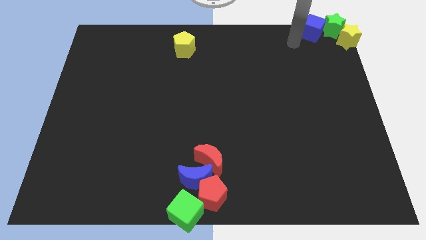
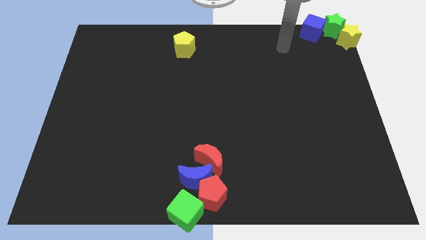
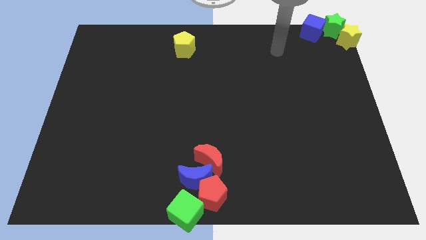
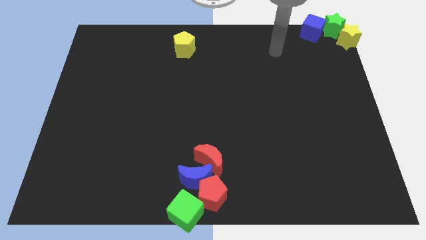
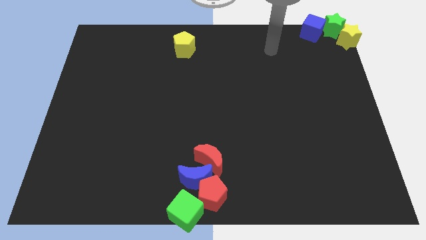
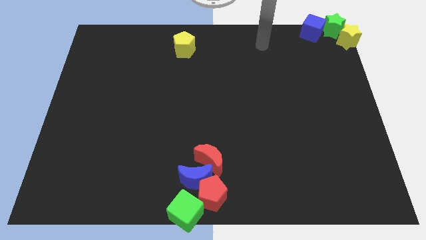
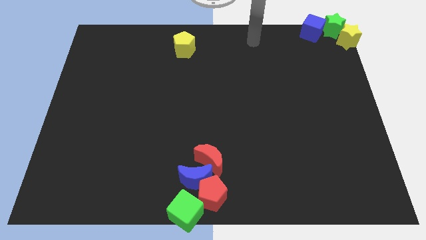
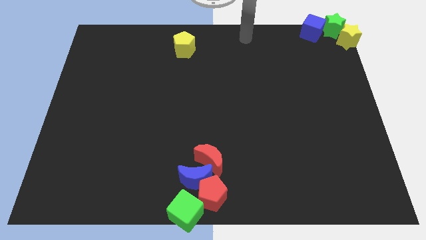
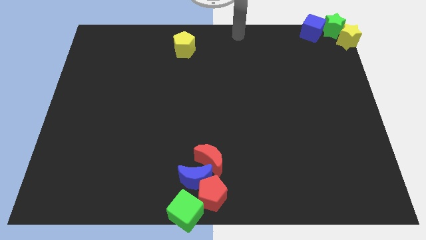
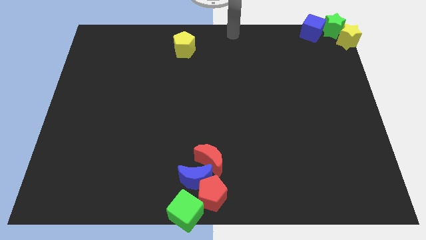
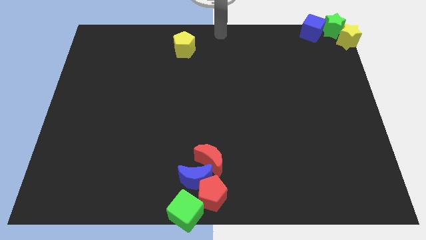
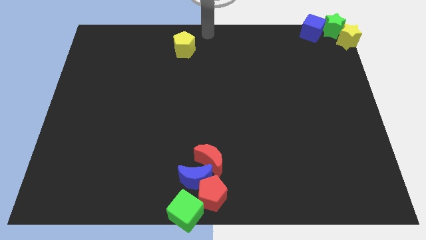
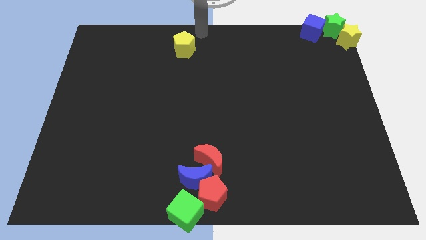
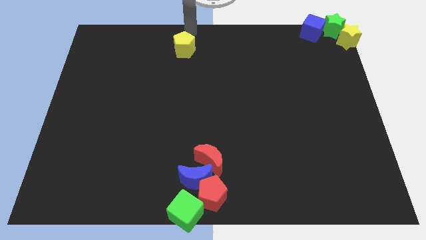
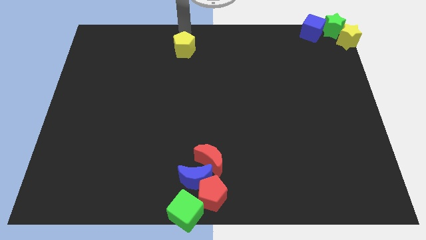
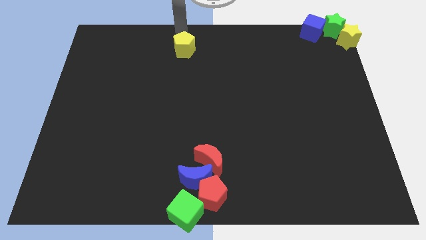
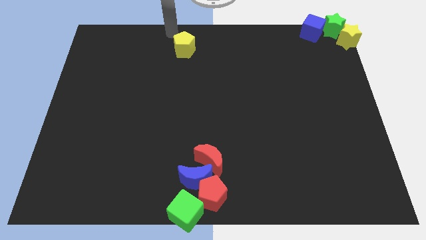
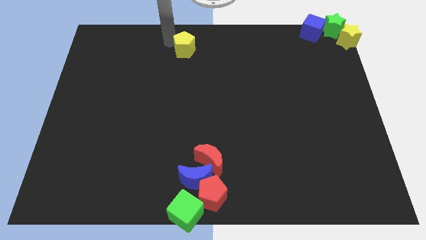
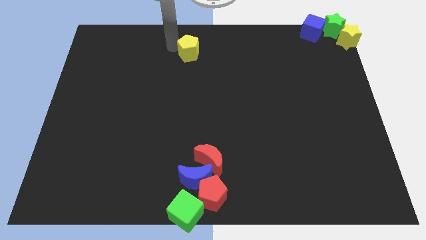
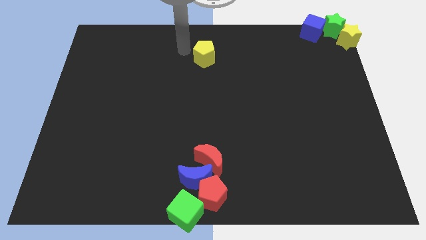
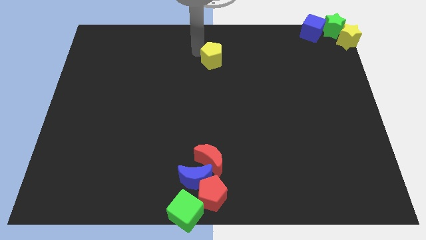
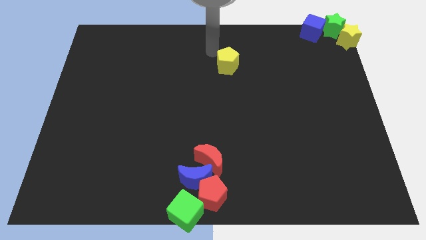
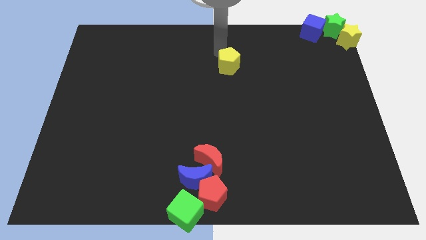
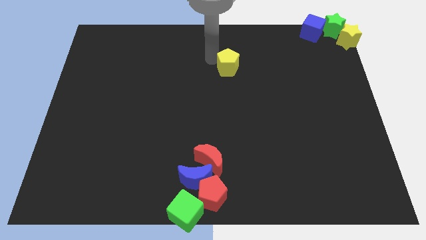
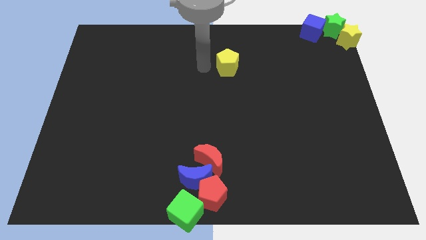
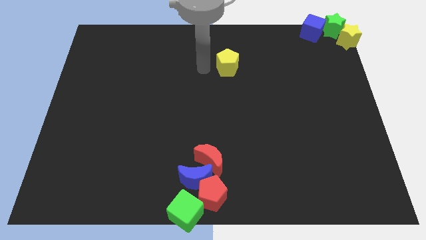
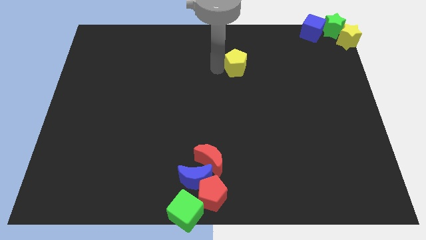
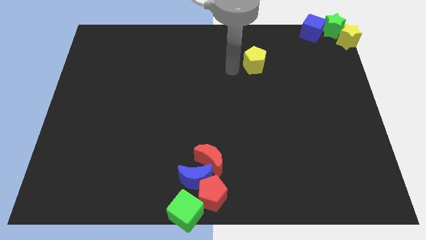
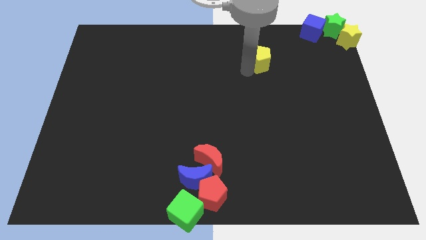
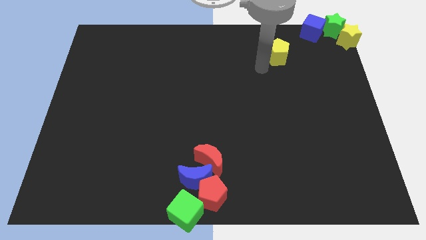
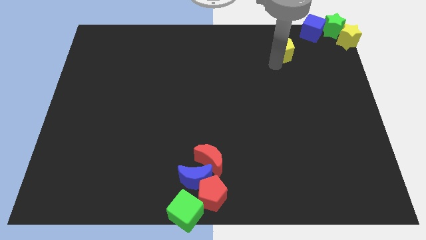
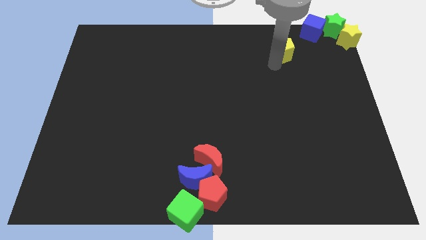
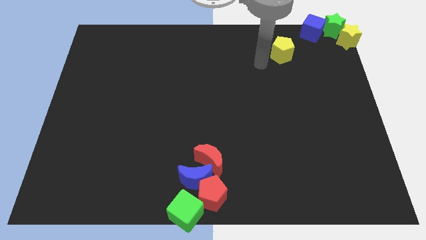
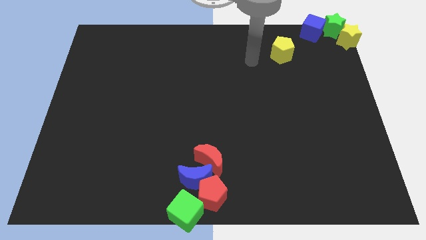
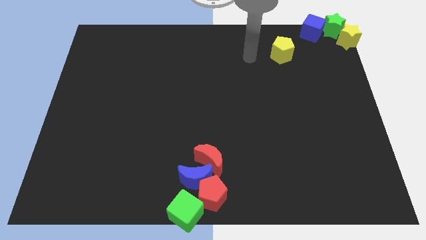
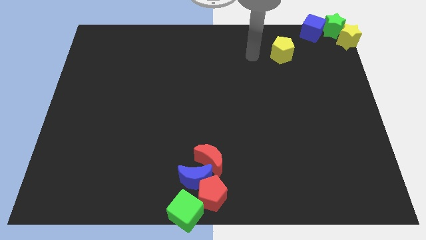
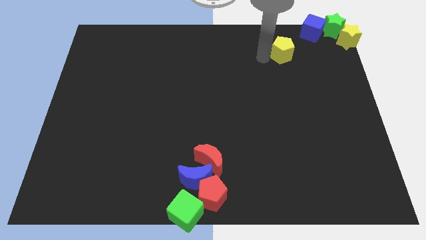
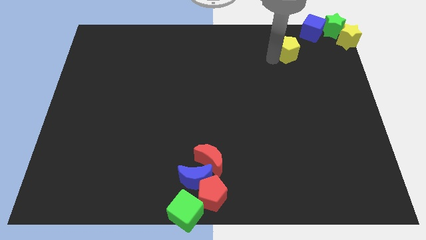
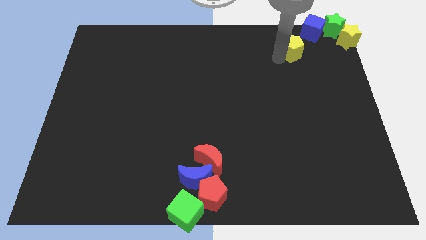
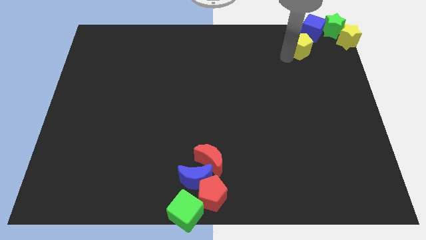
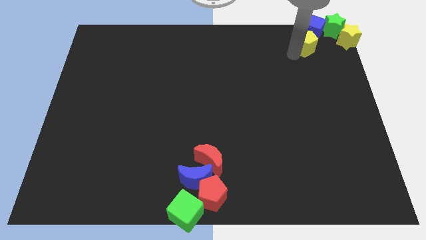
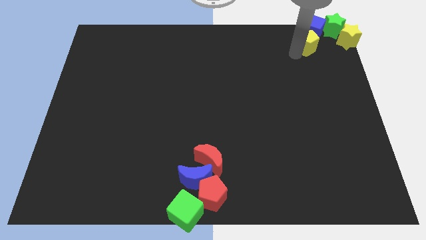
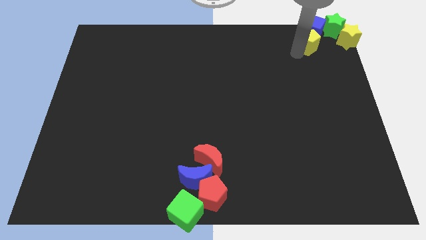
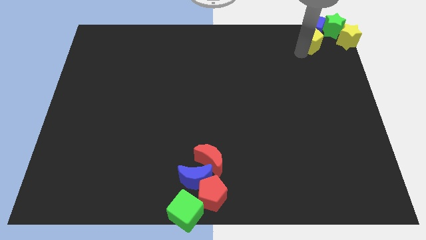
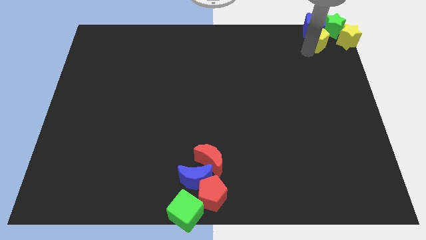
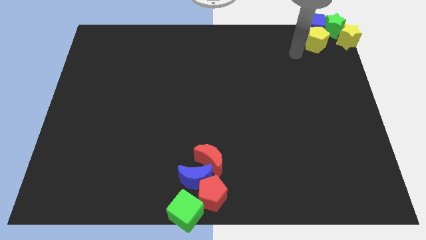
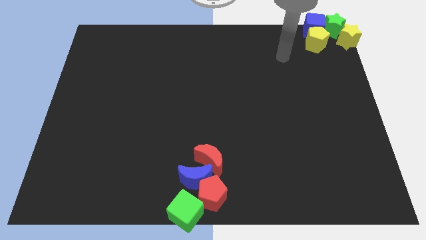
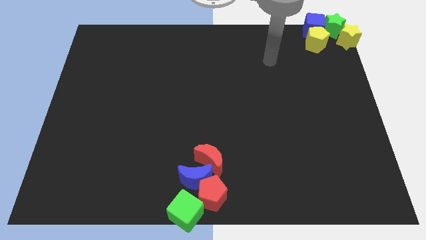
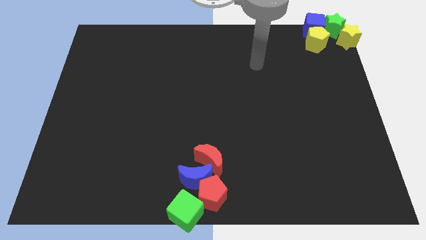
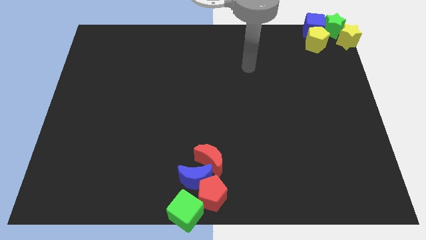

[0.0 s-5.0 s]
place the yellow pentagon vertically below the blue cube

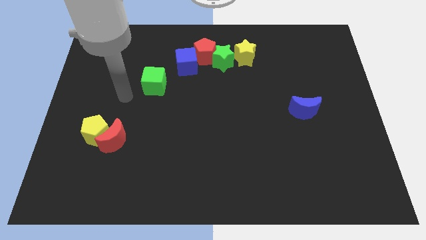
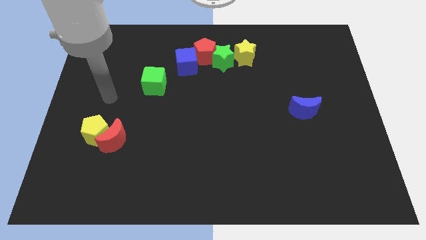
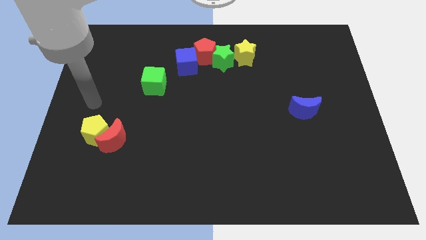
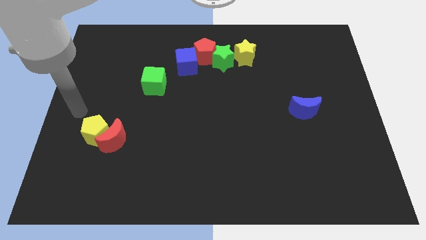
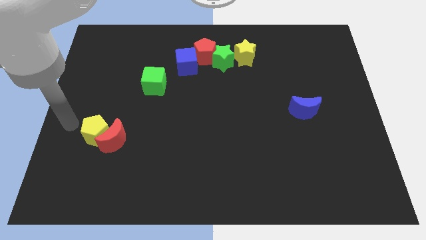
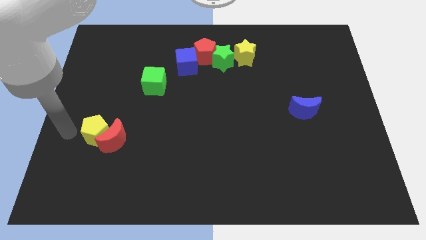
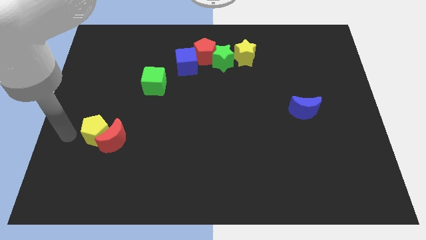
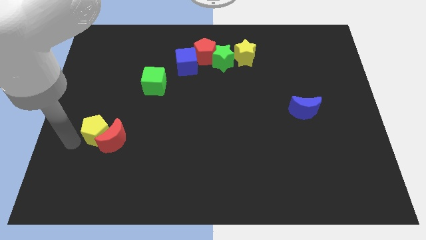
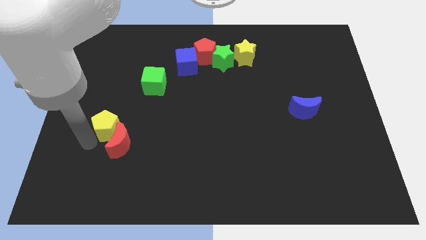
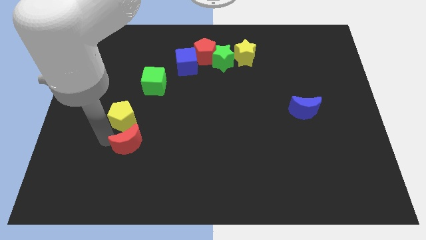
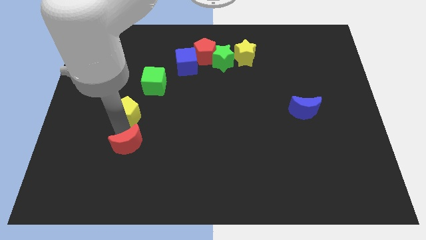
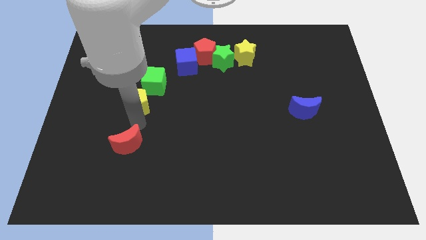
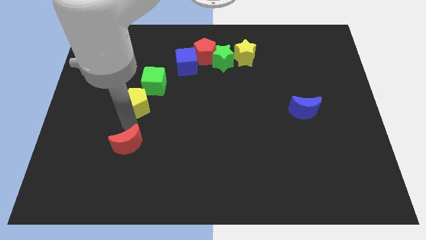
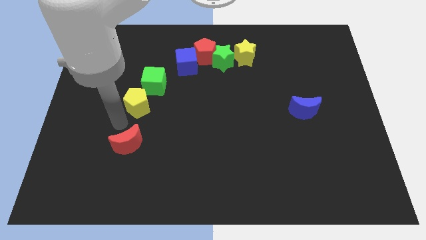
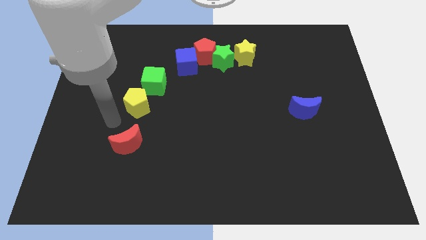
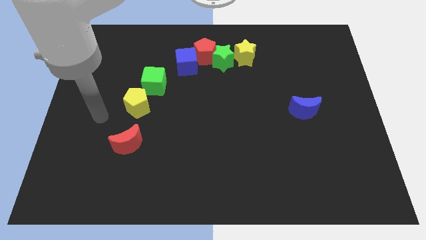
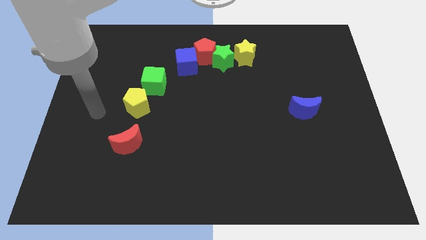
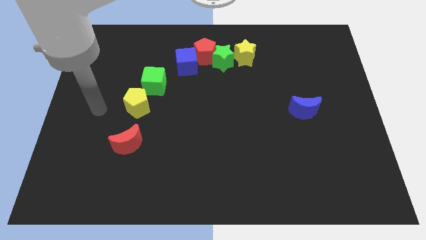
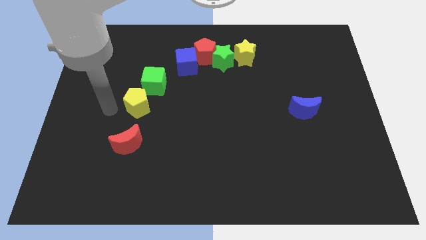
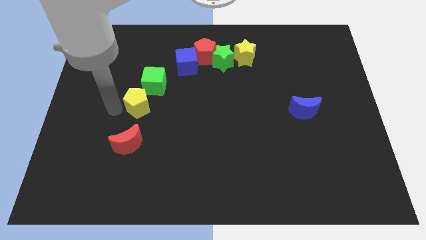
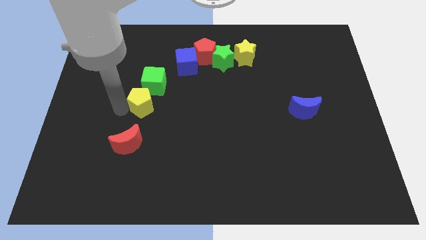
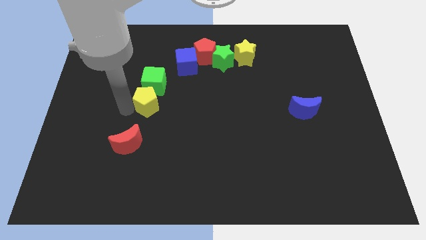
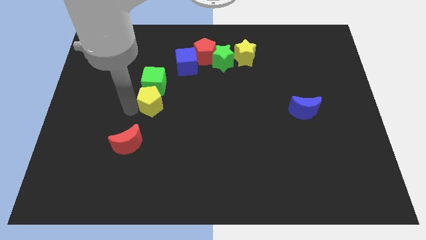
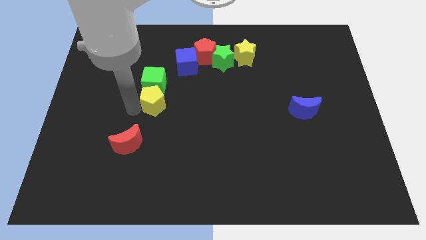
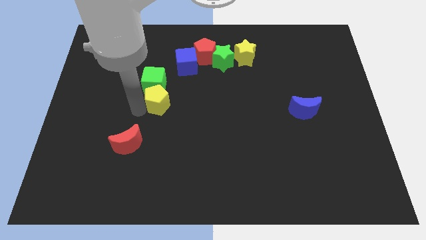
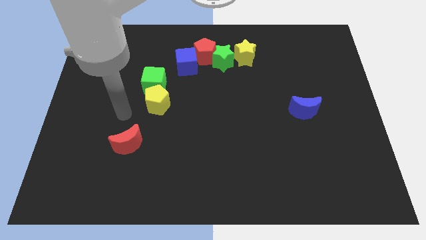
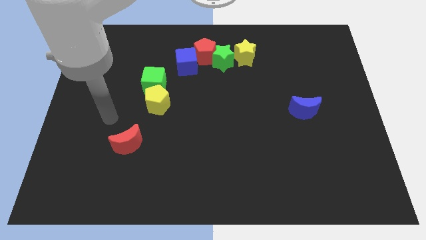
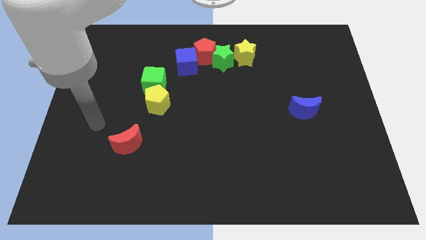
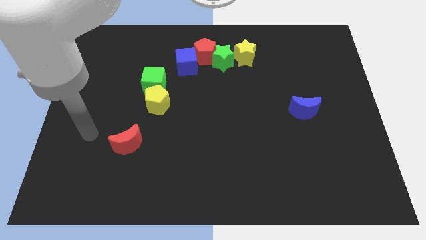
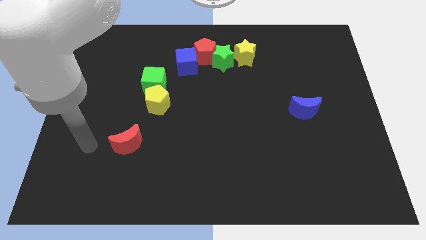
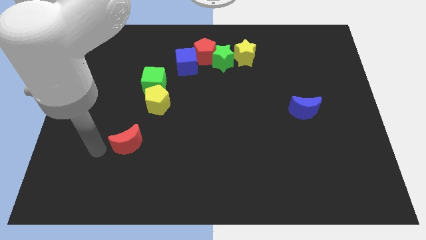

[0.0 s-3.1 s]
place the yellow pentagon and red moon in a vertical line below the green cube

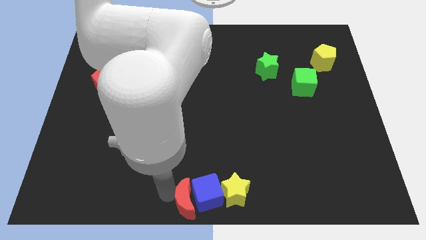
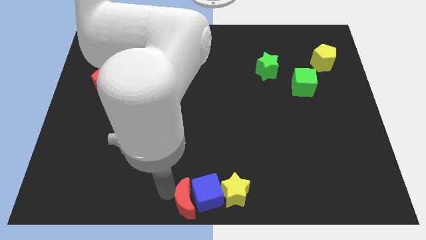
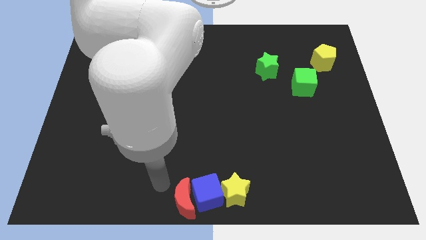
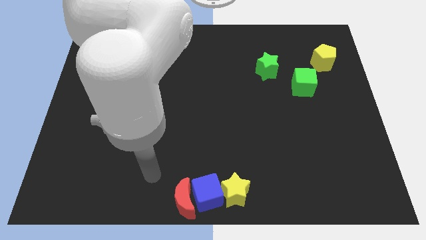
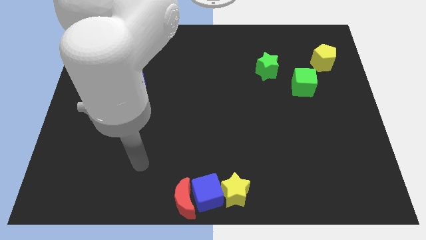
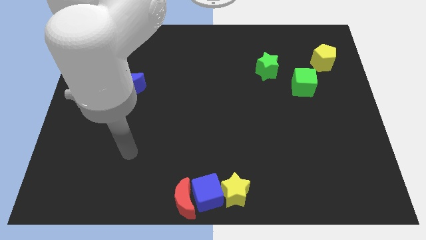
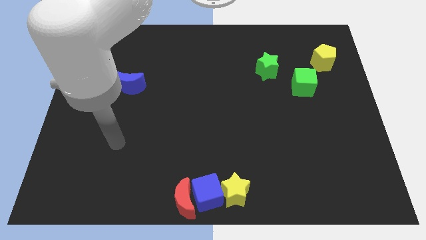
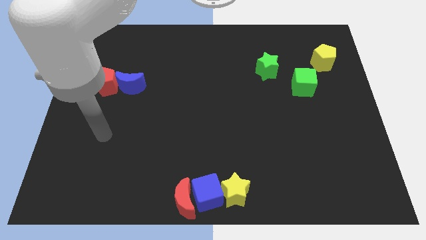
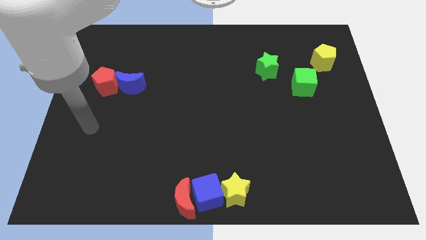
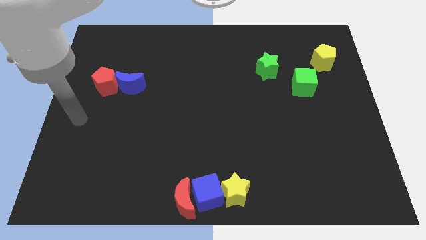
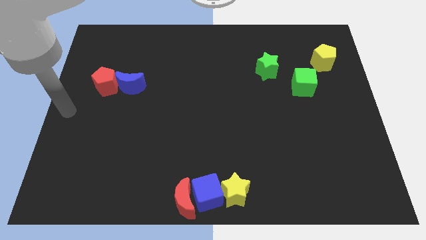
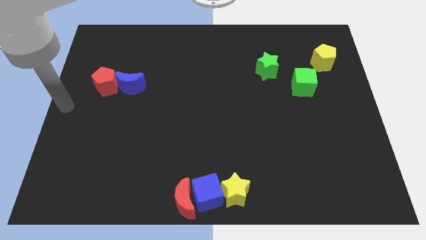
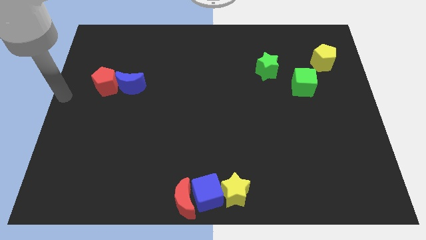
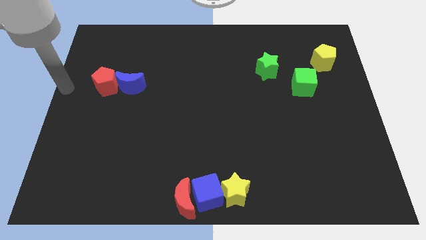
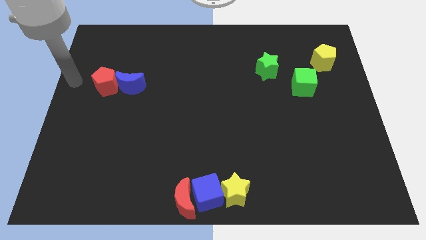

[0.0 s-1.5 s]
move the arm to the left of the red pentagon
